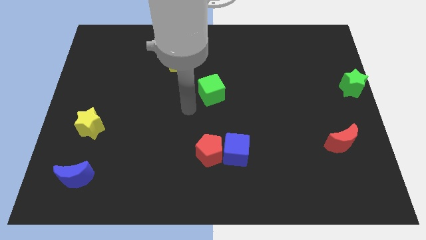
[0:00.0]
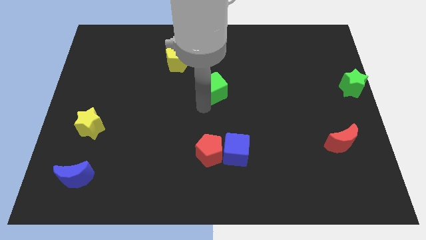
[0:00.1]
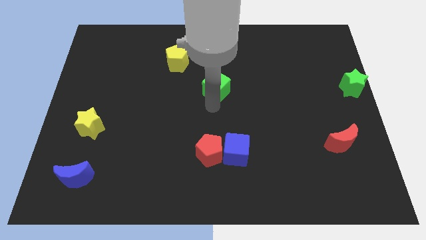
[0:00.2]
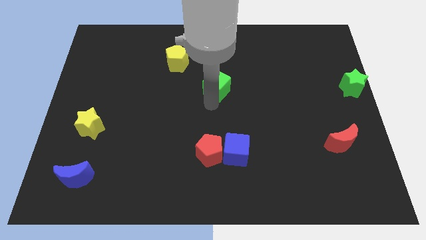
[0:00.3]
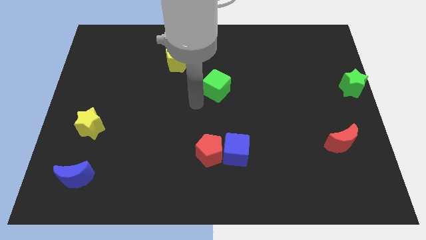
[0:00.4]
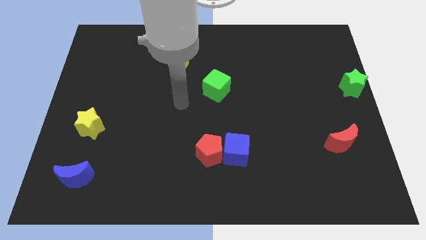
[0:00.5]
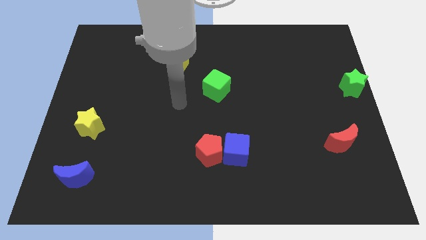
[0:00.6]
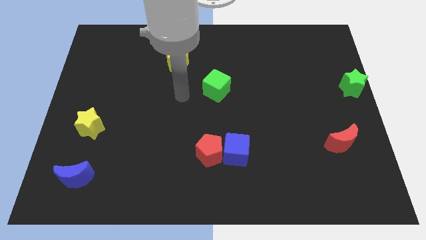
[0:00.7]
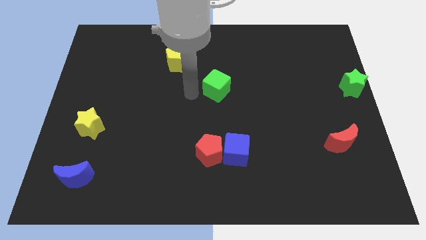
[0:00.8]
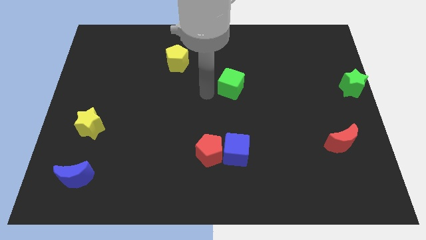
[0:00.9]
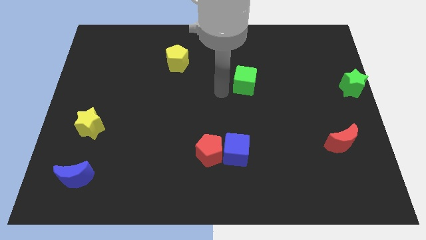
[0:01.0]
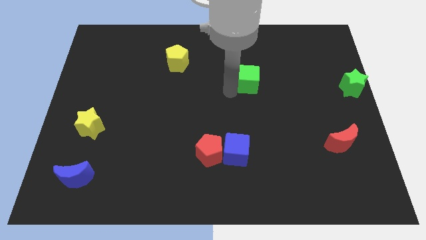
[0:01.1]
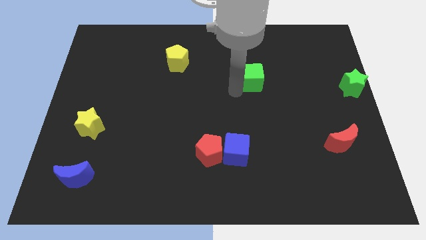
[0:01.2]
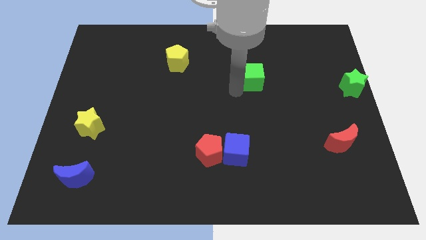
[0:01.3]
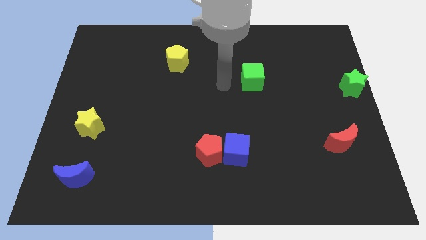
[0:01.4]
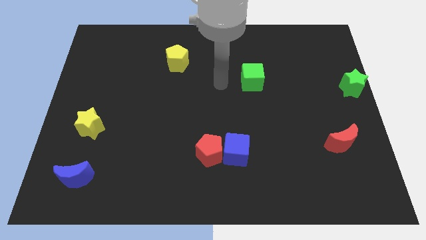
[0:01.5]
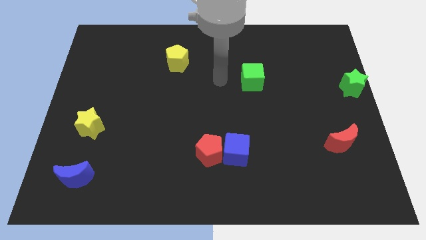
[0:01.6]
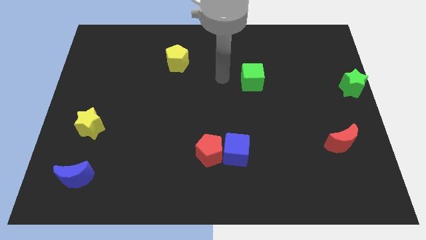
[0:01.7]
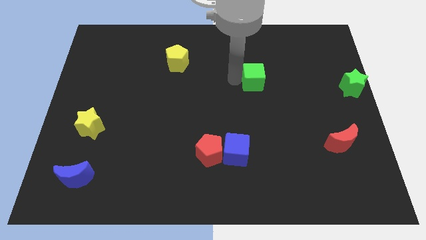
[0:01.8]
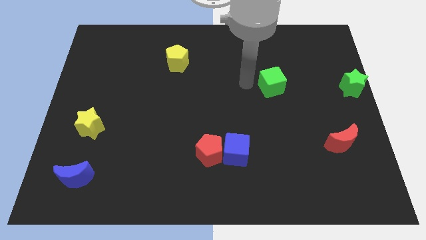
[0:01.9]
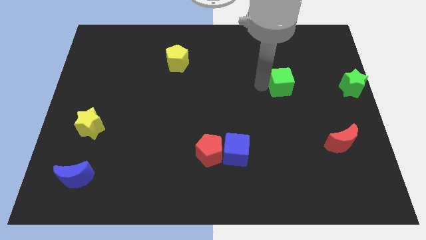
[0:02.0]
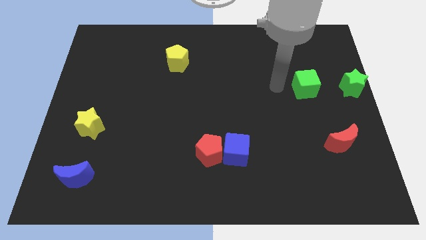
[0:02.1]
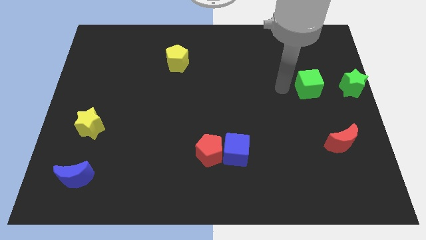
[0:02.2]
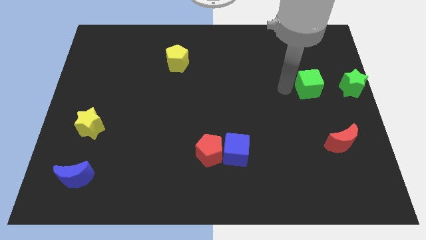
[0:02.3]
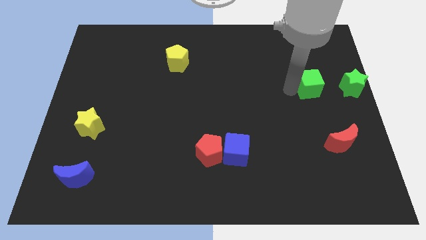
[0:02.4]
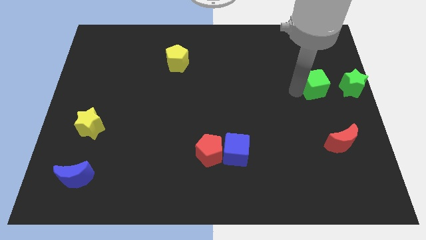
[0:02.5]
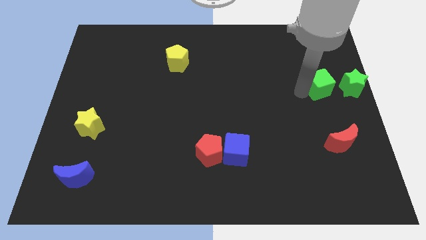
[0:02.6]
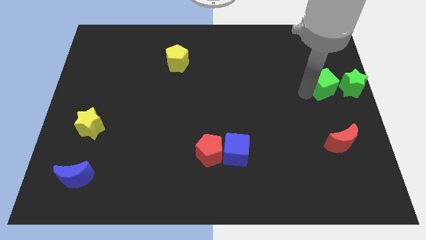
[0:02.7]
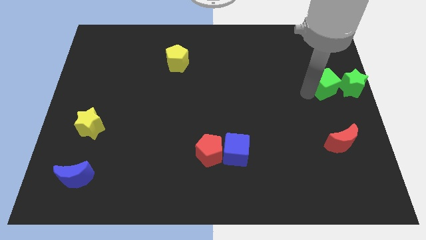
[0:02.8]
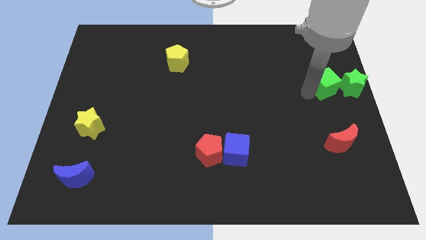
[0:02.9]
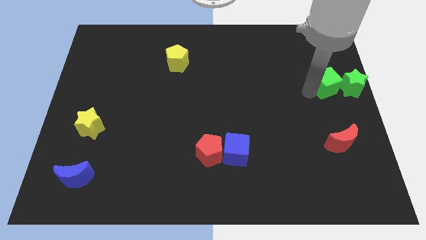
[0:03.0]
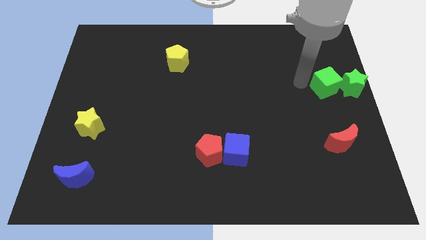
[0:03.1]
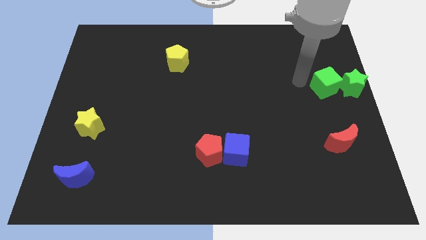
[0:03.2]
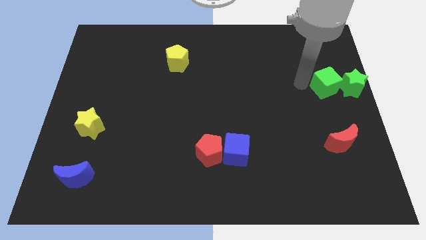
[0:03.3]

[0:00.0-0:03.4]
move green cube into green star

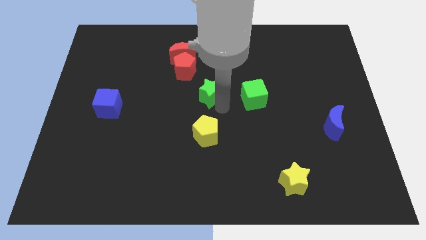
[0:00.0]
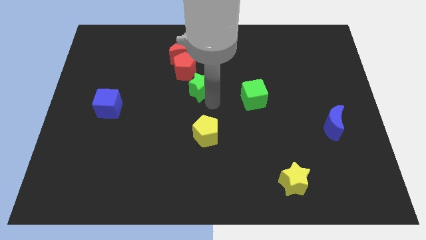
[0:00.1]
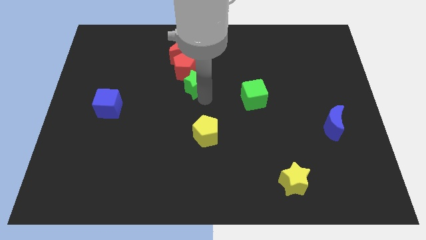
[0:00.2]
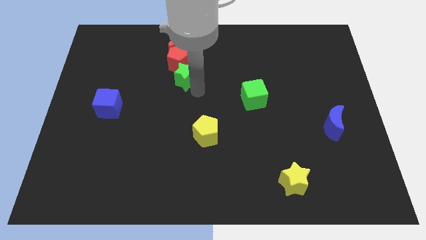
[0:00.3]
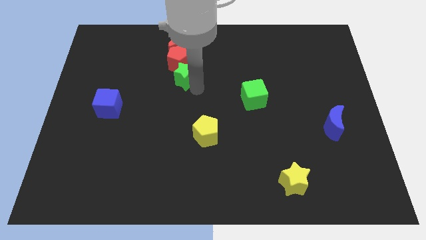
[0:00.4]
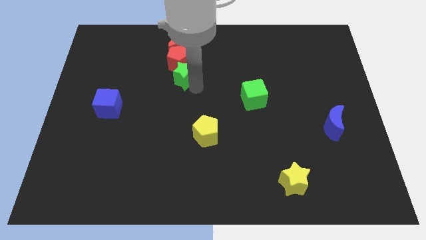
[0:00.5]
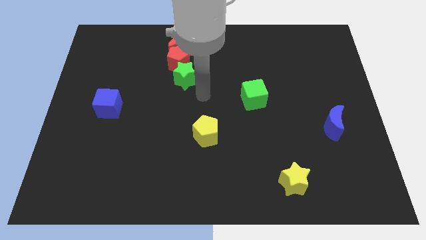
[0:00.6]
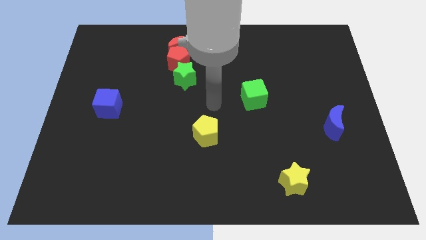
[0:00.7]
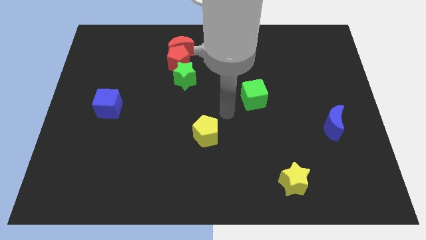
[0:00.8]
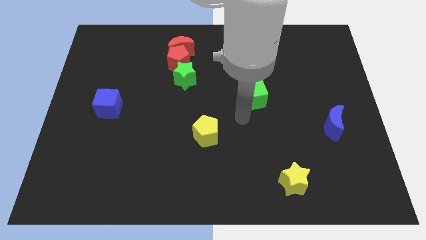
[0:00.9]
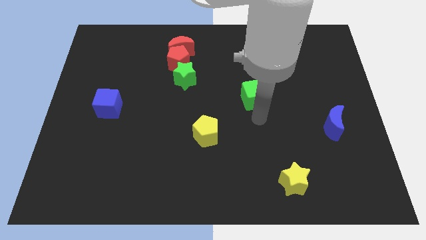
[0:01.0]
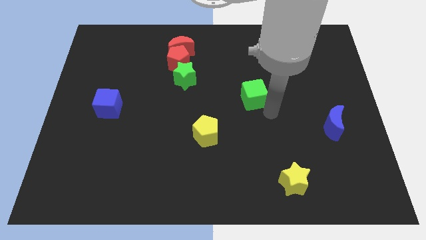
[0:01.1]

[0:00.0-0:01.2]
push the green star into red pentagon

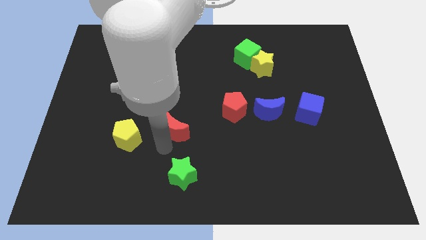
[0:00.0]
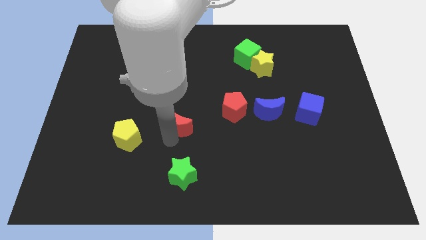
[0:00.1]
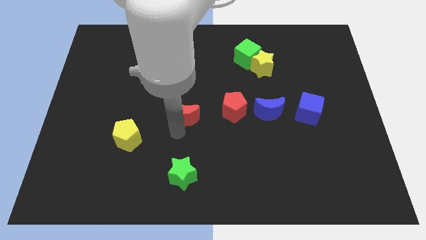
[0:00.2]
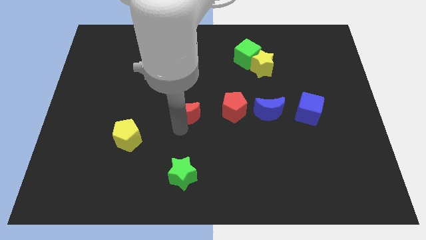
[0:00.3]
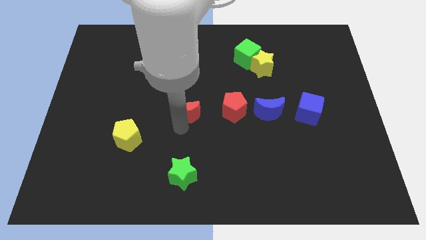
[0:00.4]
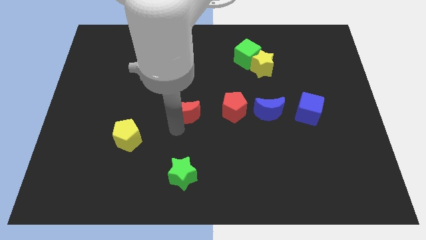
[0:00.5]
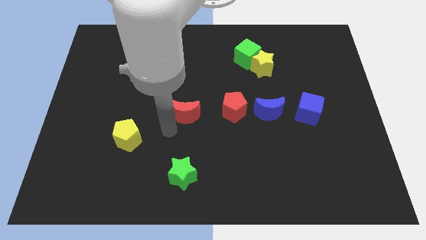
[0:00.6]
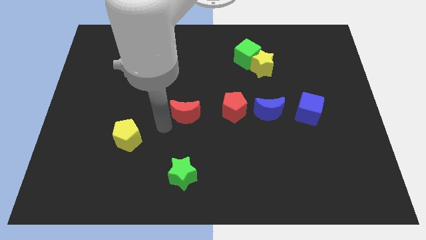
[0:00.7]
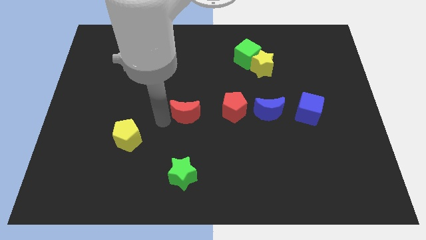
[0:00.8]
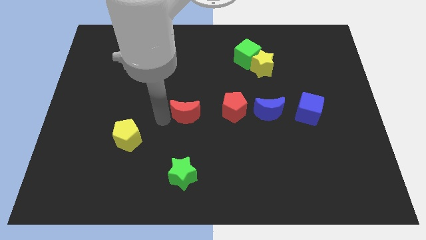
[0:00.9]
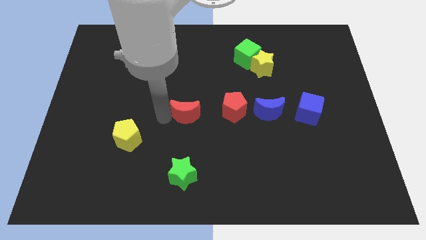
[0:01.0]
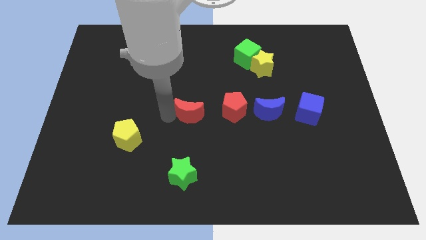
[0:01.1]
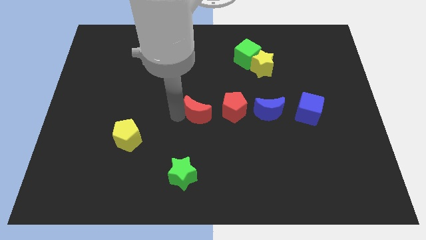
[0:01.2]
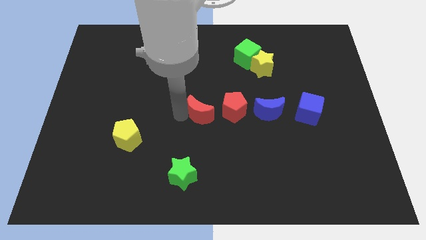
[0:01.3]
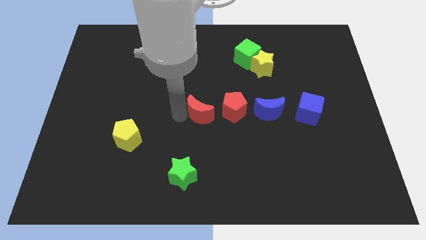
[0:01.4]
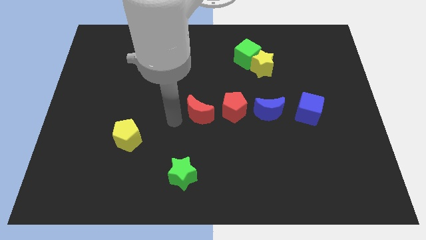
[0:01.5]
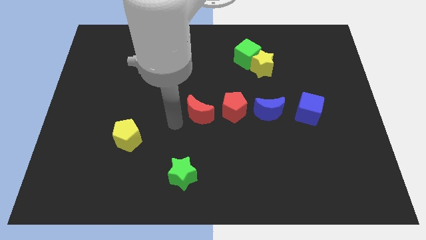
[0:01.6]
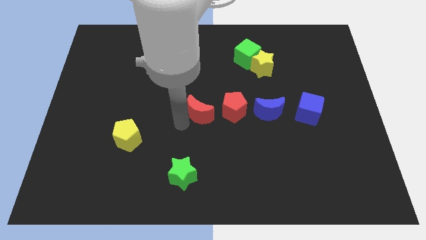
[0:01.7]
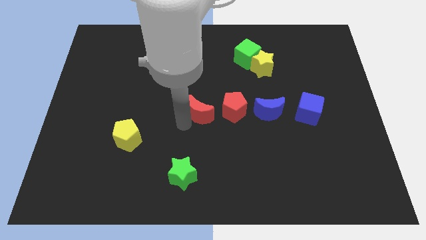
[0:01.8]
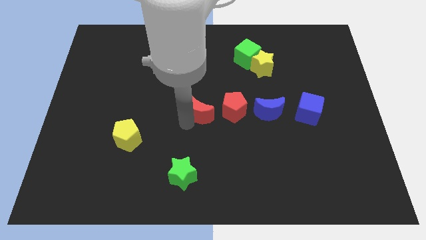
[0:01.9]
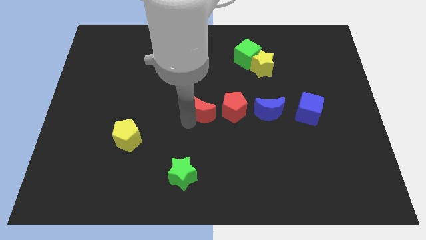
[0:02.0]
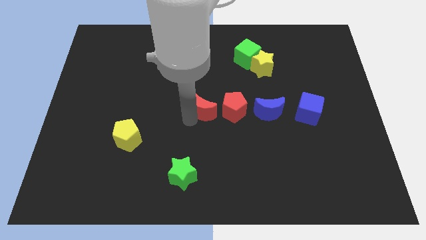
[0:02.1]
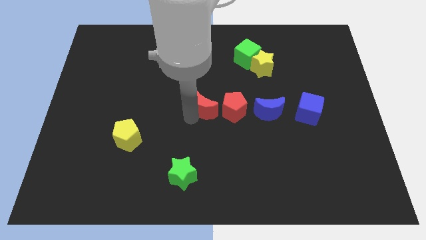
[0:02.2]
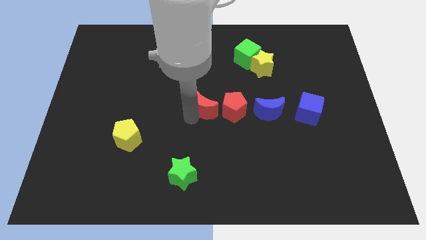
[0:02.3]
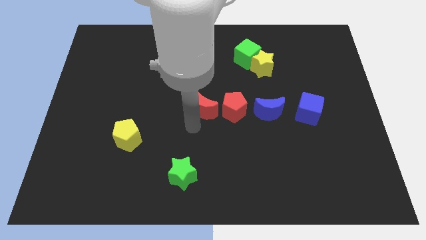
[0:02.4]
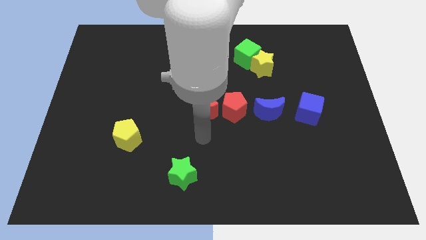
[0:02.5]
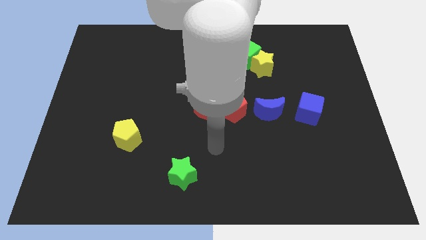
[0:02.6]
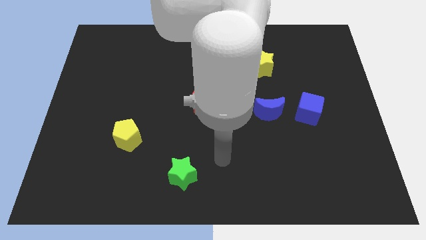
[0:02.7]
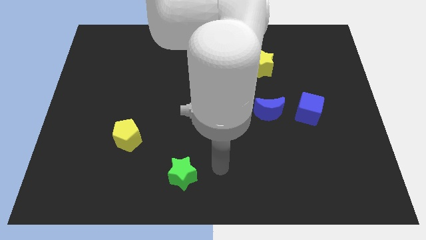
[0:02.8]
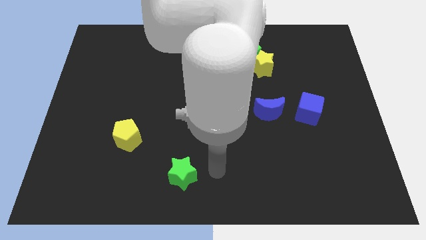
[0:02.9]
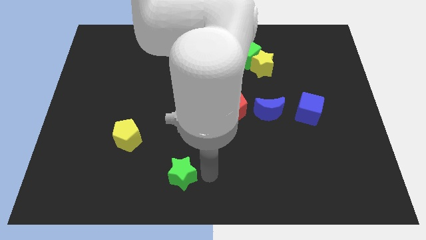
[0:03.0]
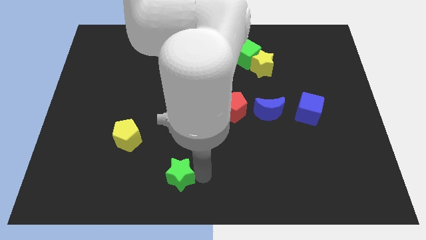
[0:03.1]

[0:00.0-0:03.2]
place the red crescent at the center

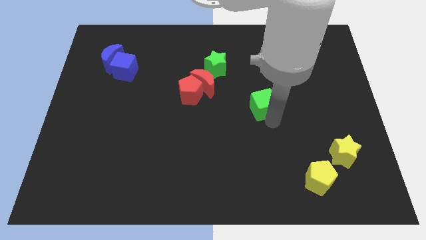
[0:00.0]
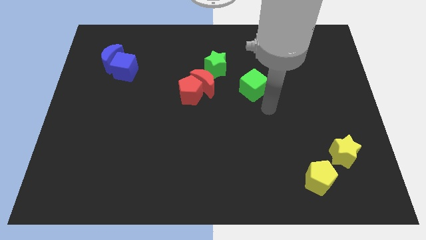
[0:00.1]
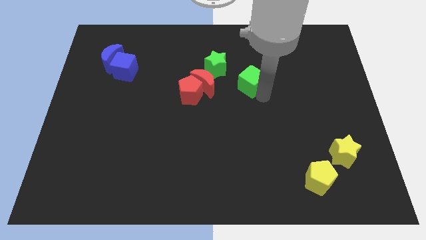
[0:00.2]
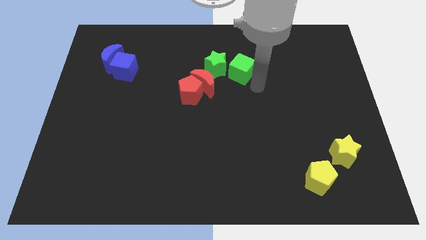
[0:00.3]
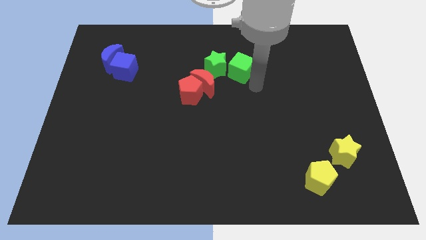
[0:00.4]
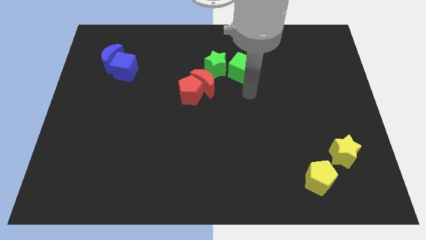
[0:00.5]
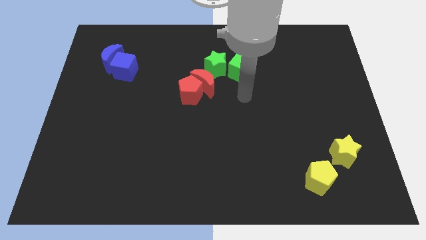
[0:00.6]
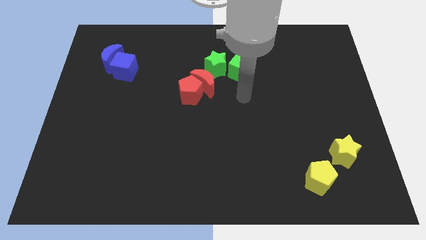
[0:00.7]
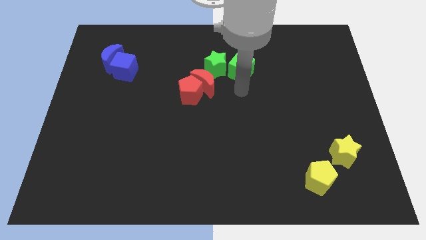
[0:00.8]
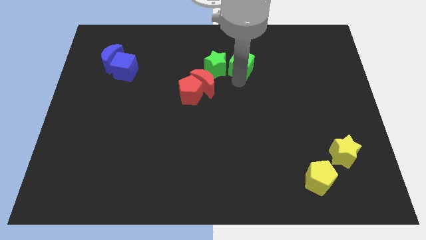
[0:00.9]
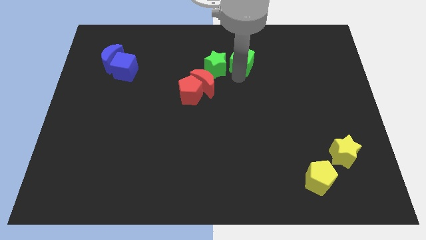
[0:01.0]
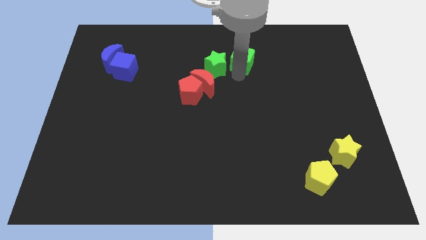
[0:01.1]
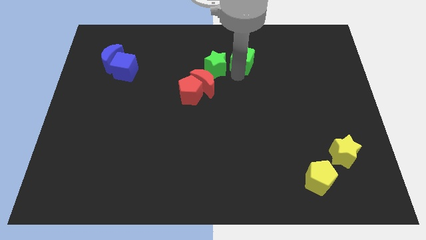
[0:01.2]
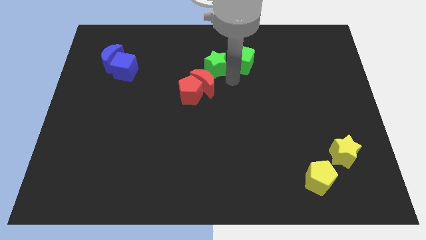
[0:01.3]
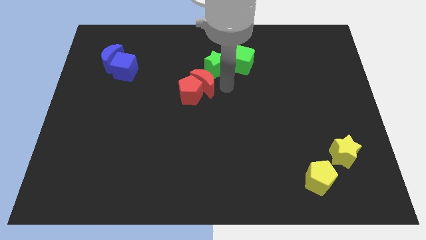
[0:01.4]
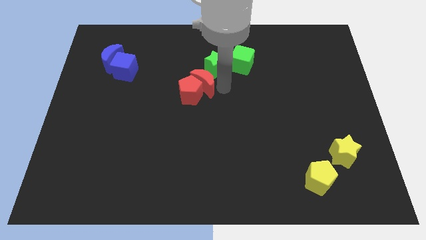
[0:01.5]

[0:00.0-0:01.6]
slide the green cube towards top
